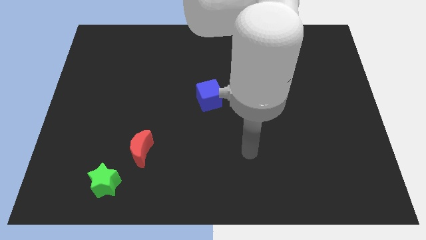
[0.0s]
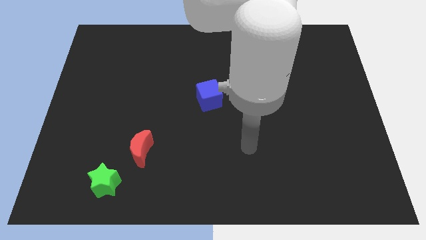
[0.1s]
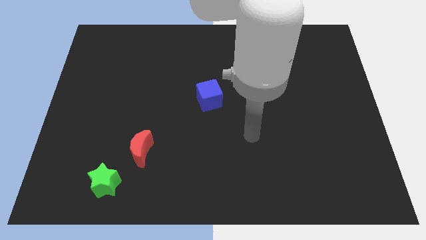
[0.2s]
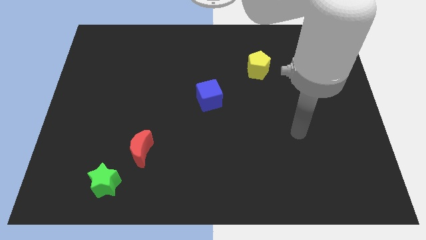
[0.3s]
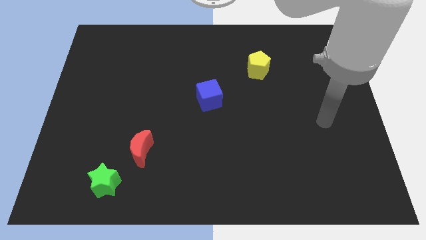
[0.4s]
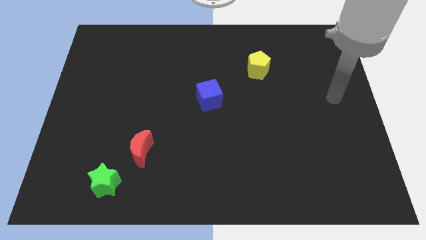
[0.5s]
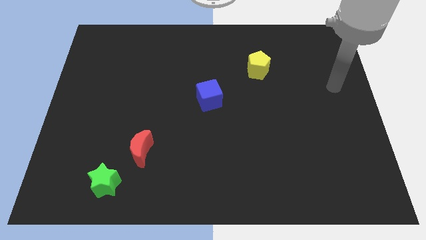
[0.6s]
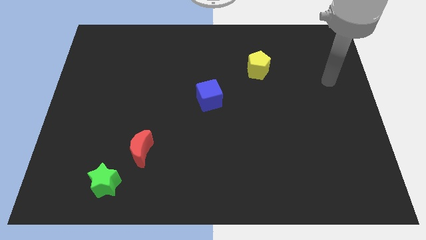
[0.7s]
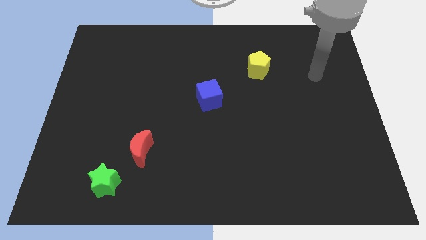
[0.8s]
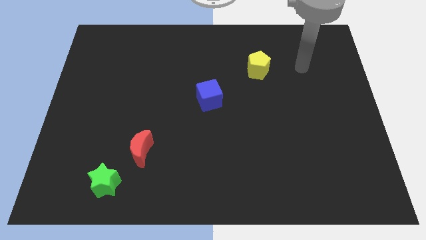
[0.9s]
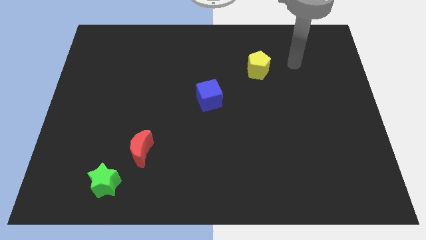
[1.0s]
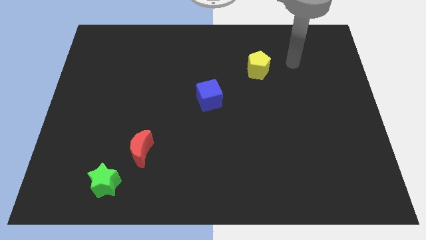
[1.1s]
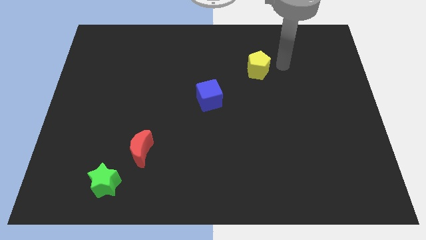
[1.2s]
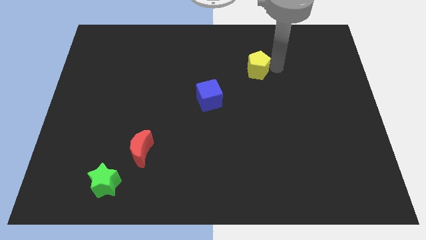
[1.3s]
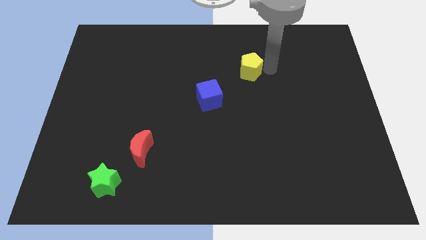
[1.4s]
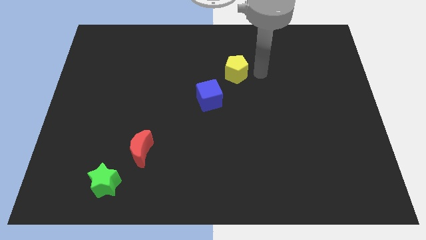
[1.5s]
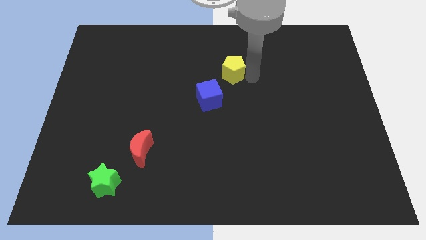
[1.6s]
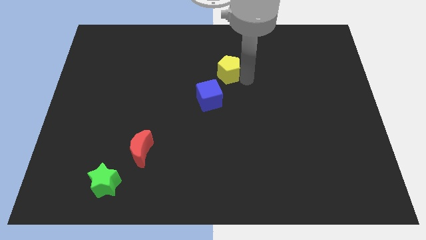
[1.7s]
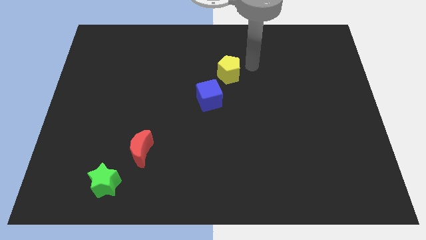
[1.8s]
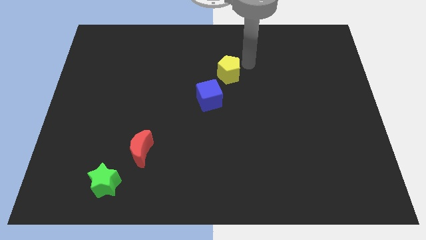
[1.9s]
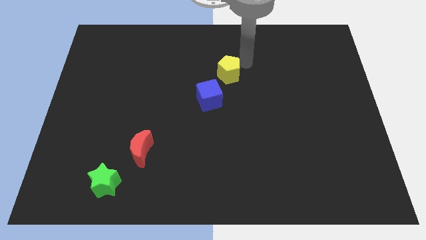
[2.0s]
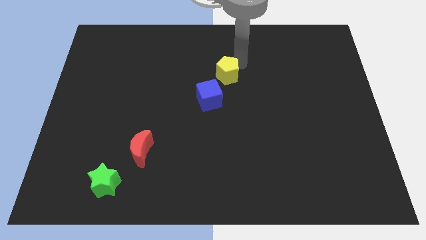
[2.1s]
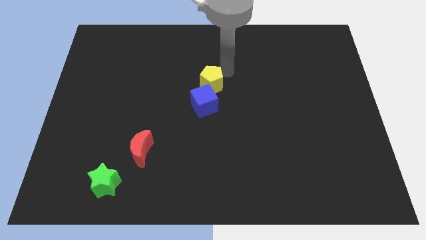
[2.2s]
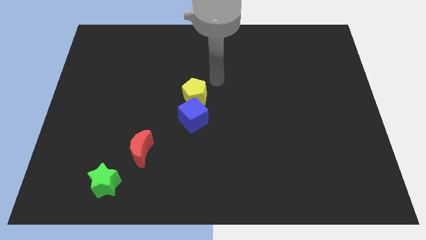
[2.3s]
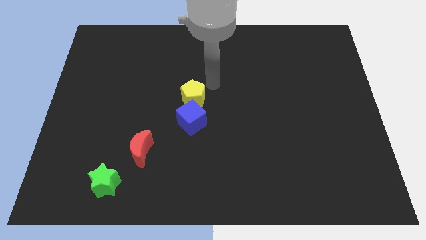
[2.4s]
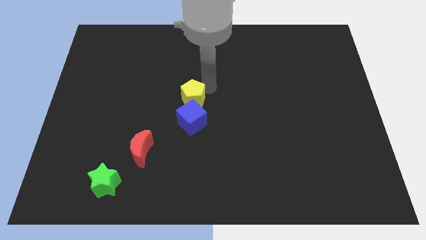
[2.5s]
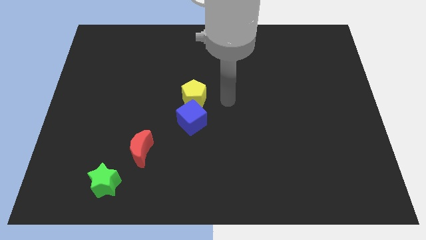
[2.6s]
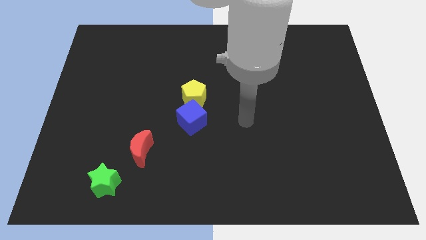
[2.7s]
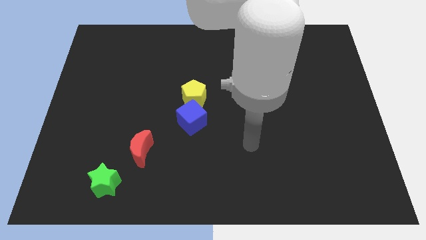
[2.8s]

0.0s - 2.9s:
push the yellow block next to the blue block

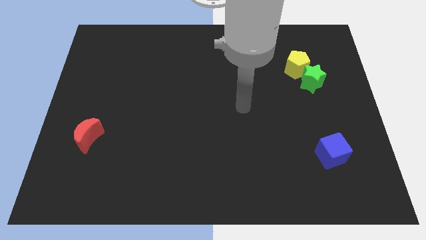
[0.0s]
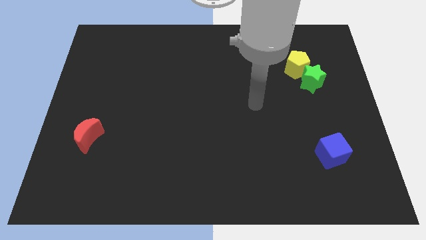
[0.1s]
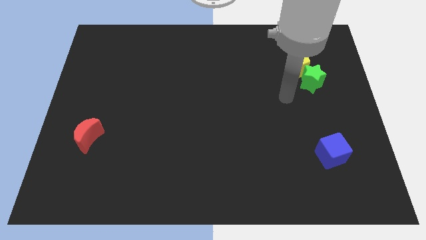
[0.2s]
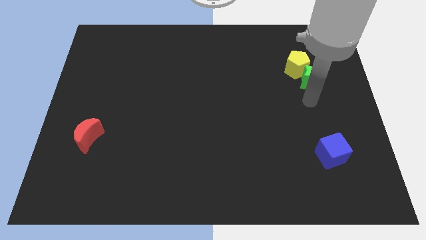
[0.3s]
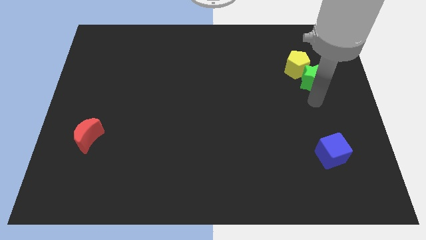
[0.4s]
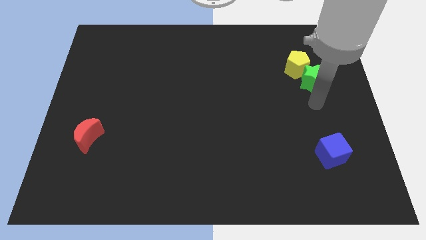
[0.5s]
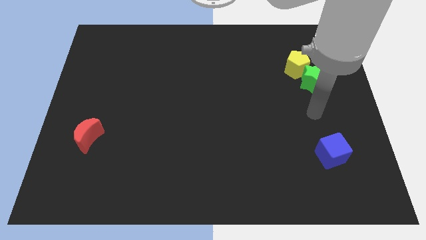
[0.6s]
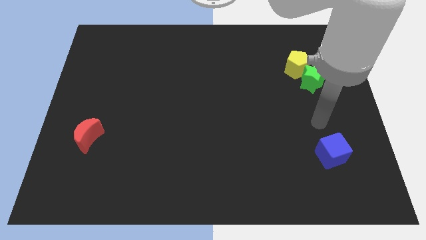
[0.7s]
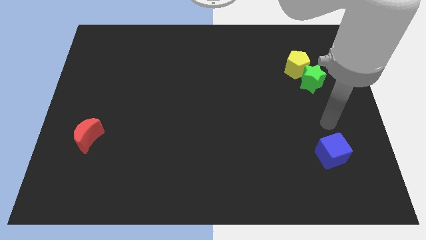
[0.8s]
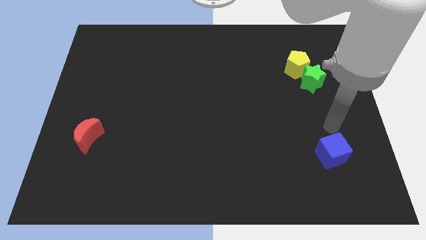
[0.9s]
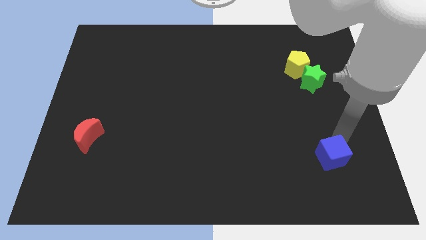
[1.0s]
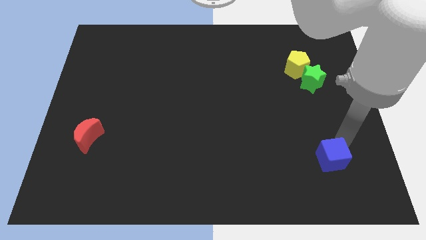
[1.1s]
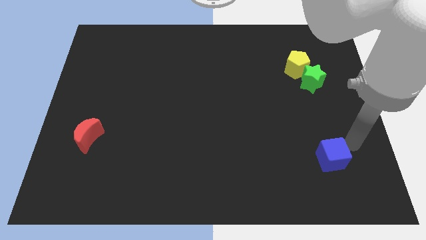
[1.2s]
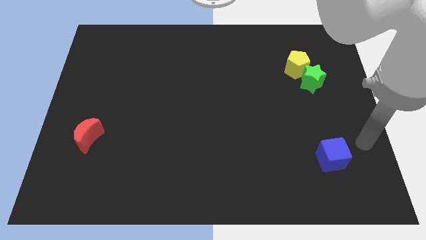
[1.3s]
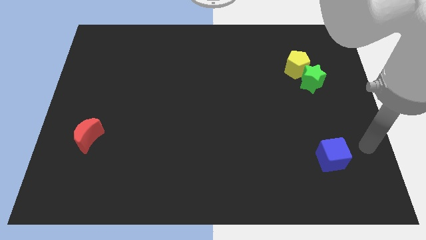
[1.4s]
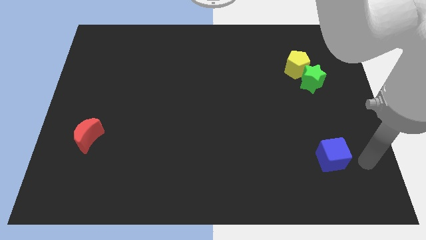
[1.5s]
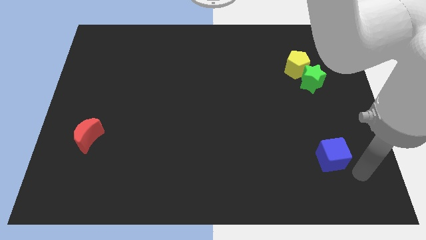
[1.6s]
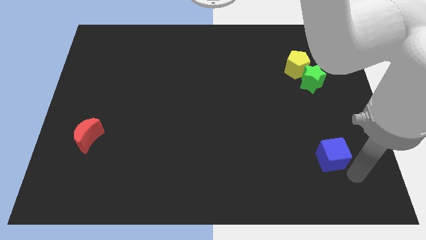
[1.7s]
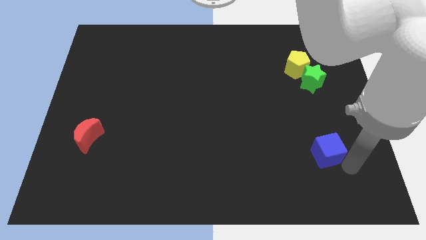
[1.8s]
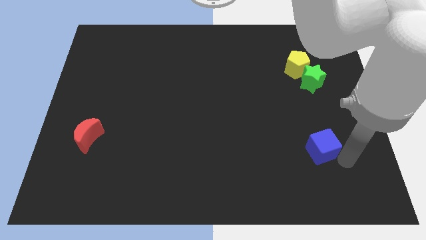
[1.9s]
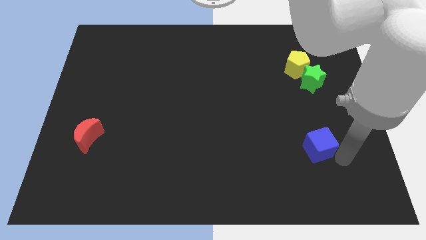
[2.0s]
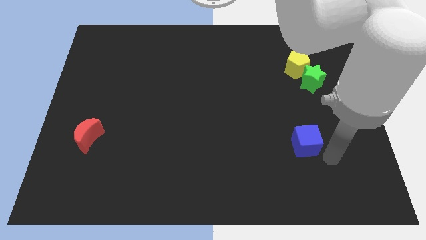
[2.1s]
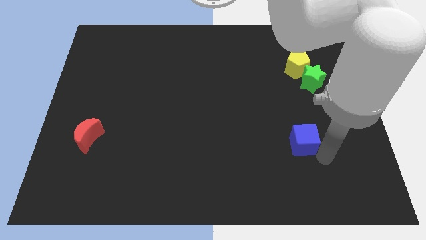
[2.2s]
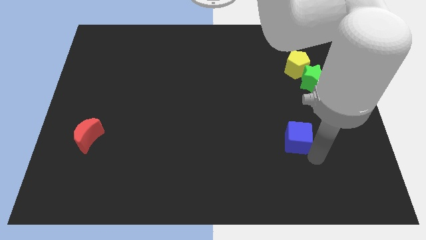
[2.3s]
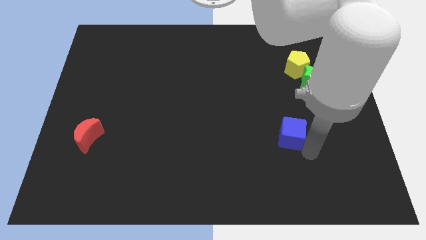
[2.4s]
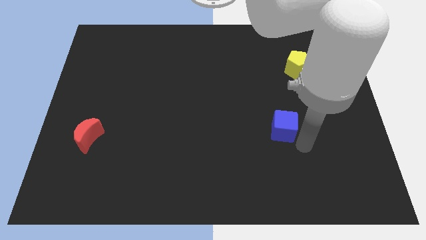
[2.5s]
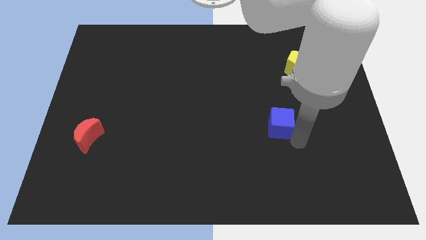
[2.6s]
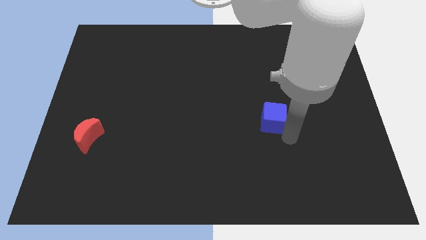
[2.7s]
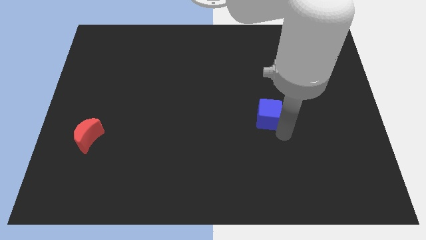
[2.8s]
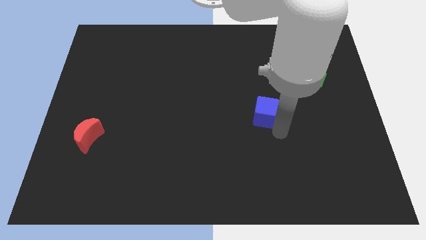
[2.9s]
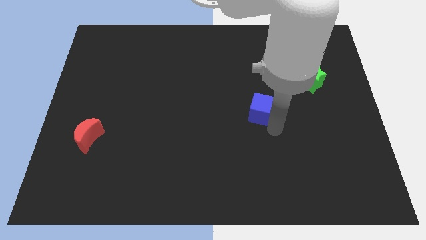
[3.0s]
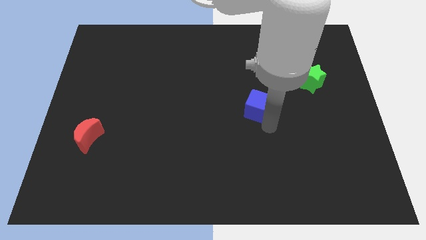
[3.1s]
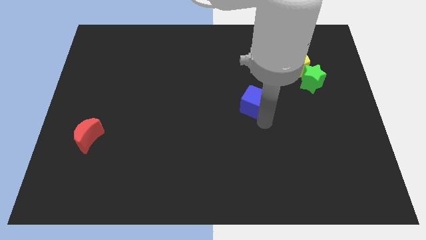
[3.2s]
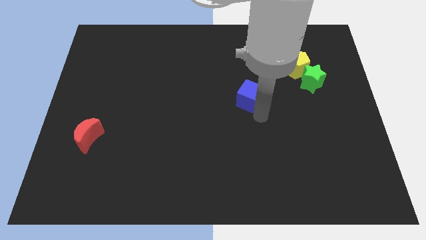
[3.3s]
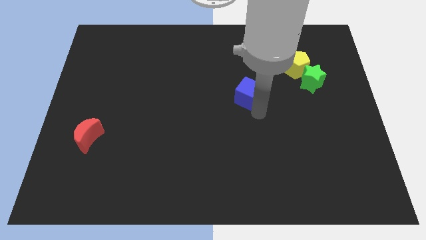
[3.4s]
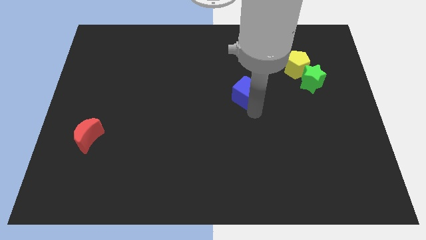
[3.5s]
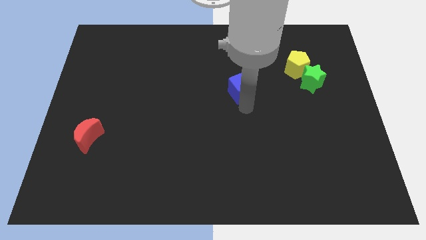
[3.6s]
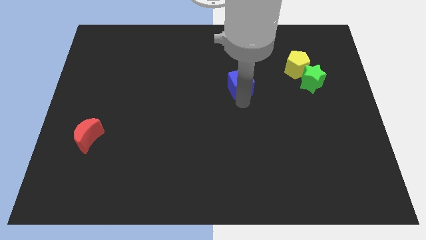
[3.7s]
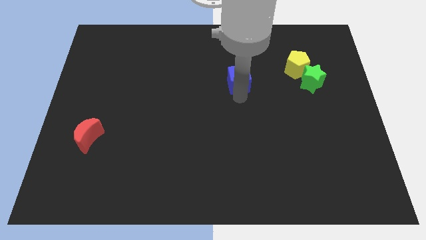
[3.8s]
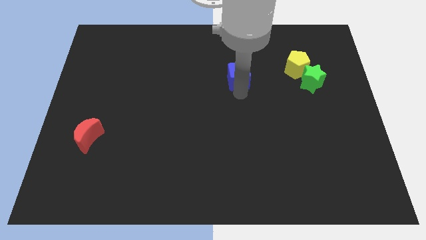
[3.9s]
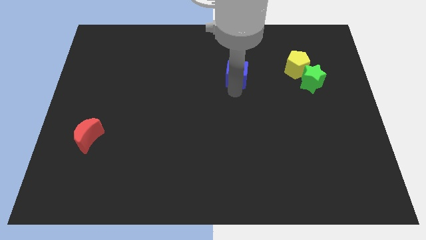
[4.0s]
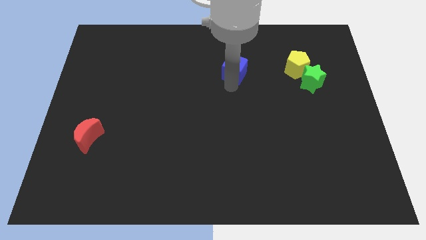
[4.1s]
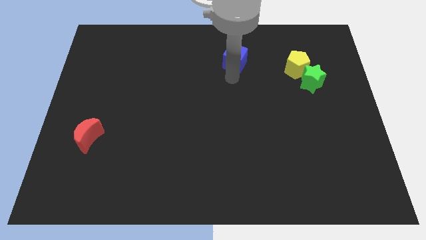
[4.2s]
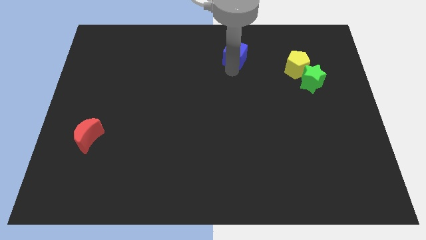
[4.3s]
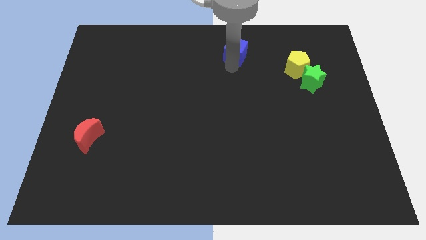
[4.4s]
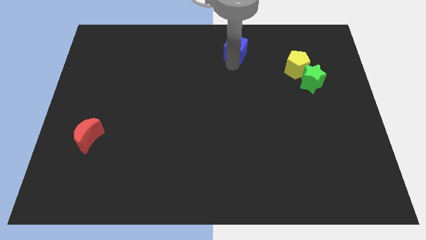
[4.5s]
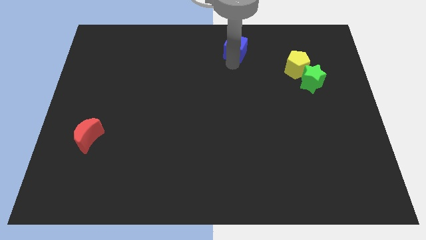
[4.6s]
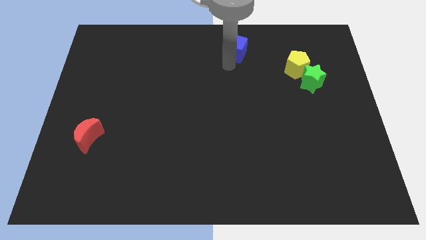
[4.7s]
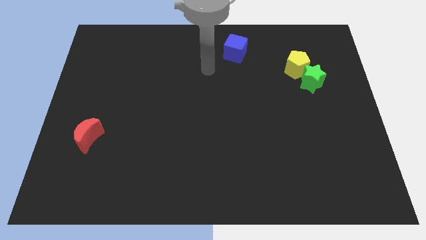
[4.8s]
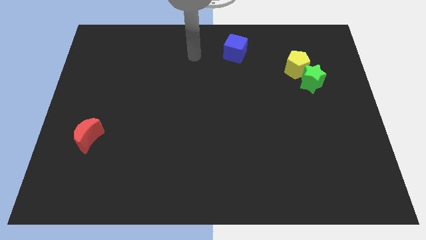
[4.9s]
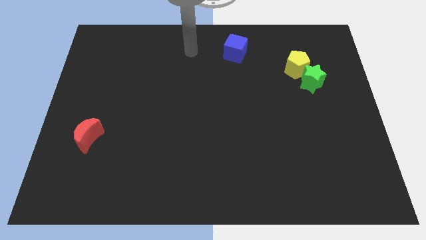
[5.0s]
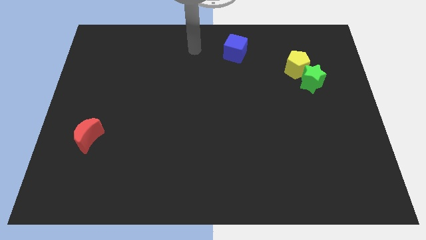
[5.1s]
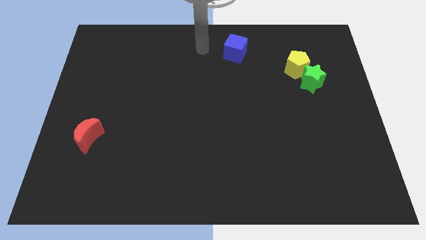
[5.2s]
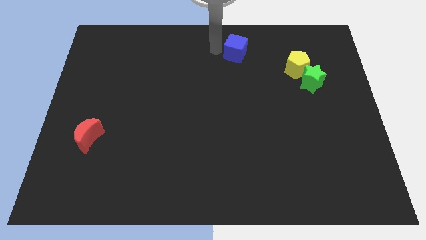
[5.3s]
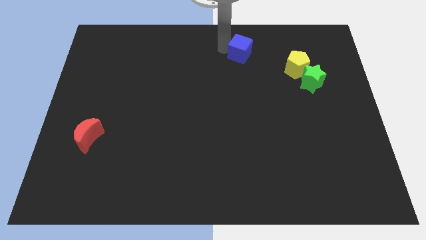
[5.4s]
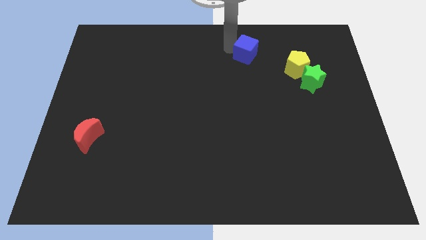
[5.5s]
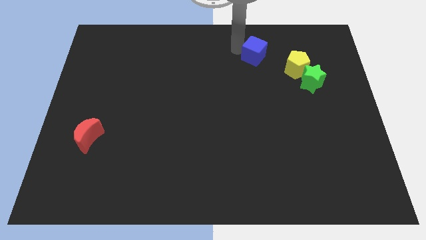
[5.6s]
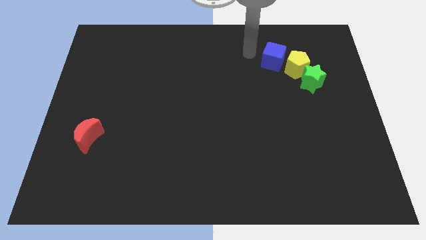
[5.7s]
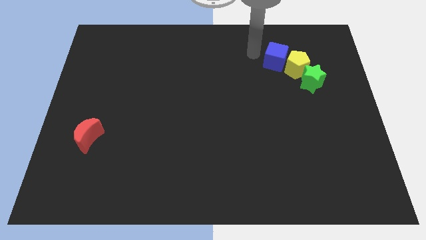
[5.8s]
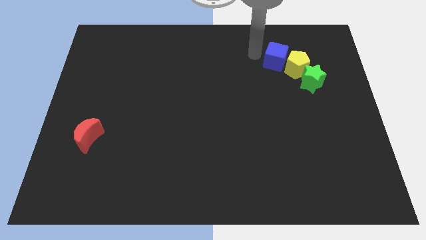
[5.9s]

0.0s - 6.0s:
put the blue block to the pentagon
